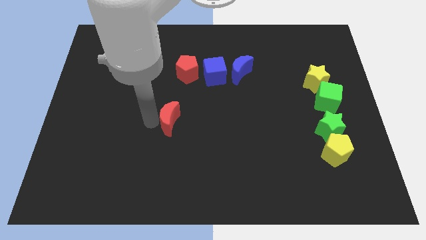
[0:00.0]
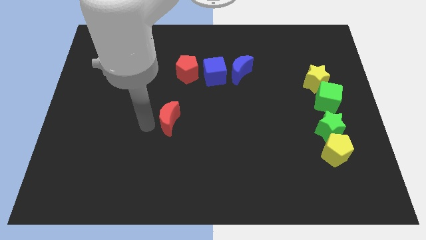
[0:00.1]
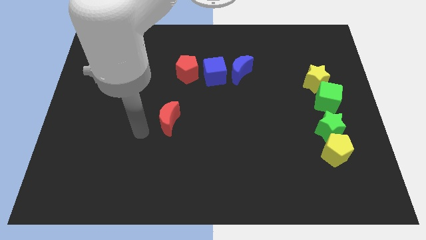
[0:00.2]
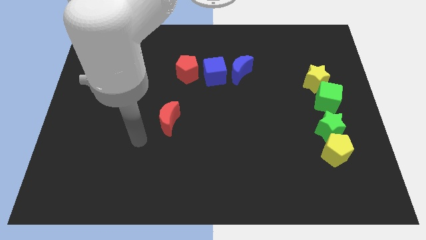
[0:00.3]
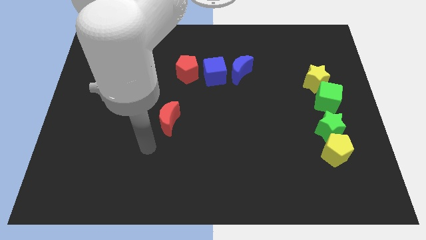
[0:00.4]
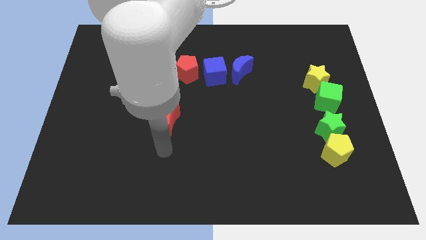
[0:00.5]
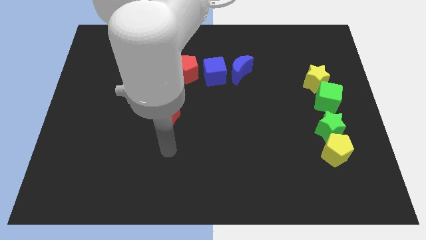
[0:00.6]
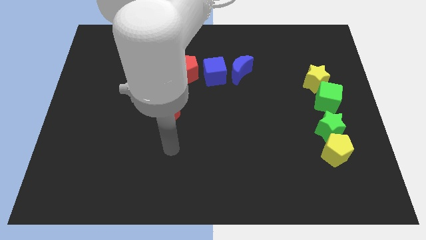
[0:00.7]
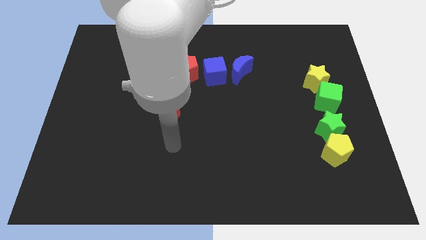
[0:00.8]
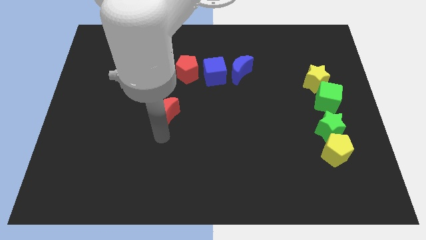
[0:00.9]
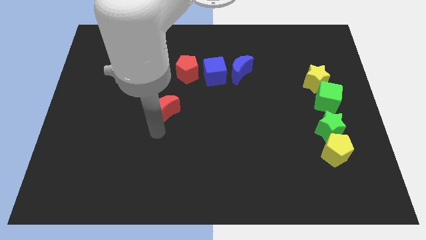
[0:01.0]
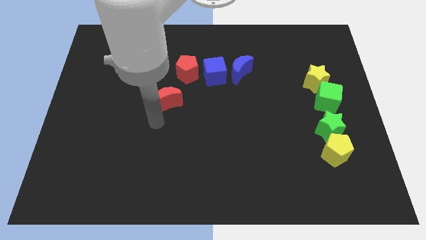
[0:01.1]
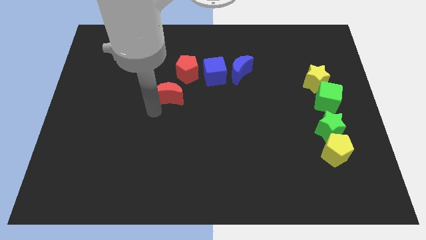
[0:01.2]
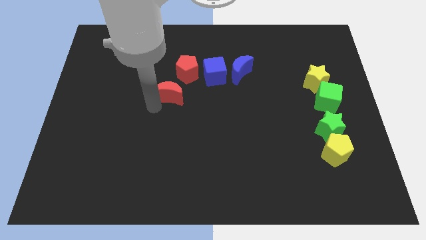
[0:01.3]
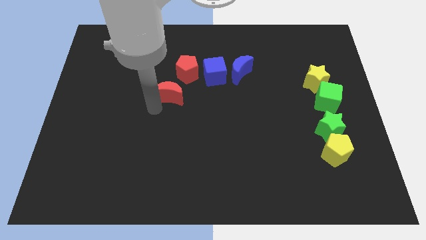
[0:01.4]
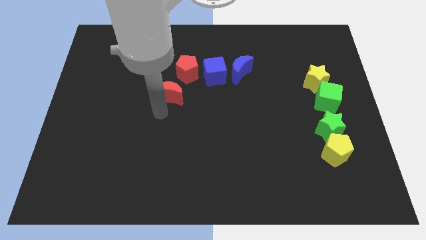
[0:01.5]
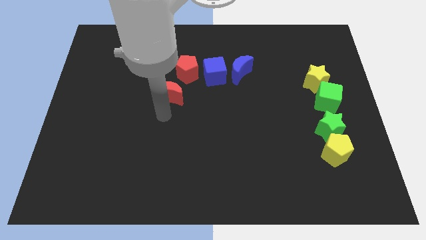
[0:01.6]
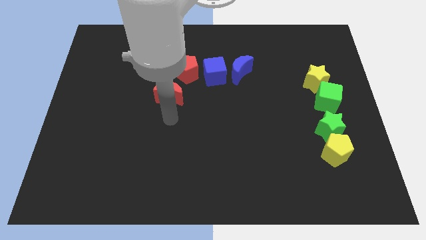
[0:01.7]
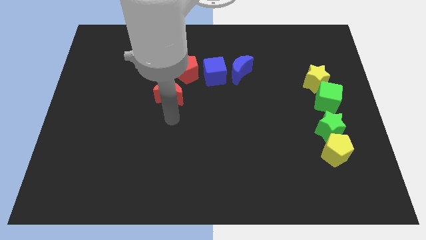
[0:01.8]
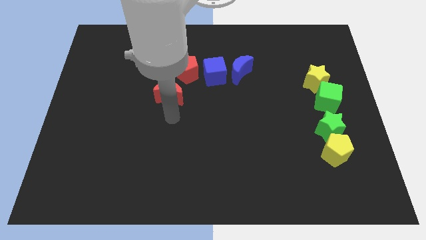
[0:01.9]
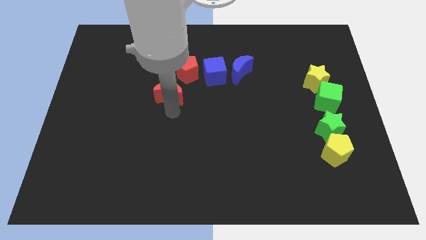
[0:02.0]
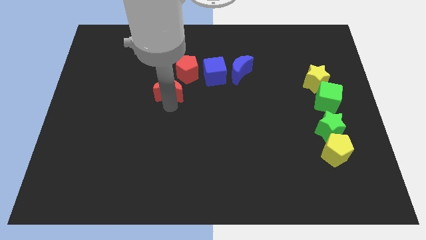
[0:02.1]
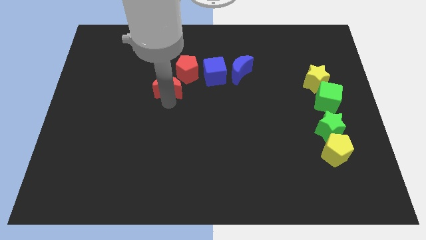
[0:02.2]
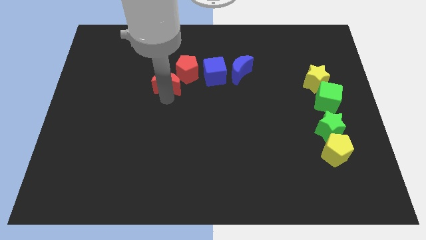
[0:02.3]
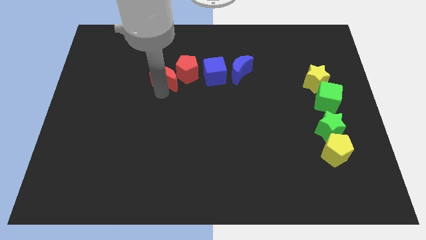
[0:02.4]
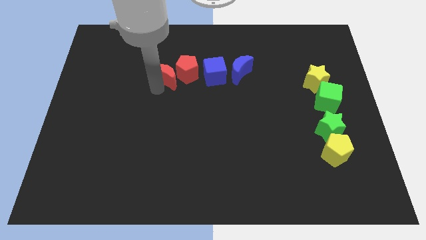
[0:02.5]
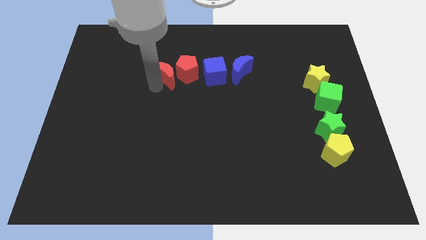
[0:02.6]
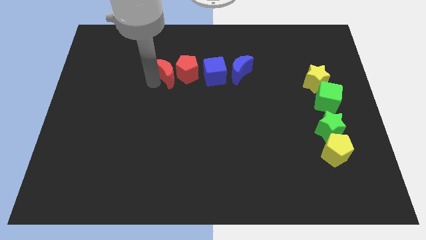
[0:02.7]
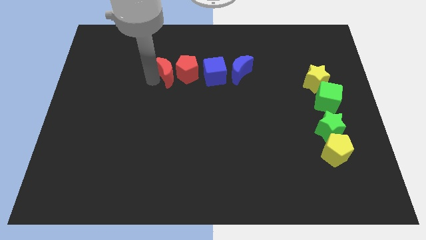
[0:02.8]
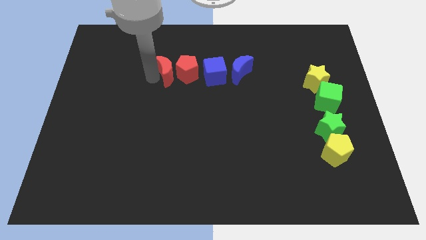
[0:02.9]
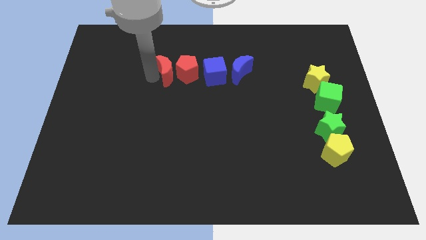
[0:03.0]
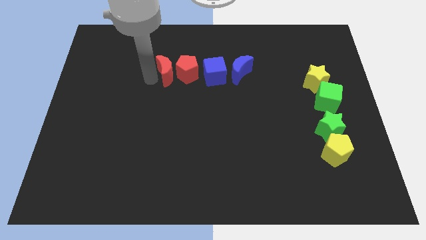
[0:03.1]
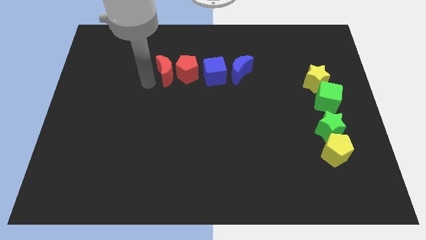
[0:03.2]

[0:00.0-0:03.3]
place the red moon to the left of the red pentagon

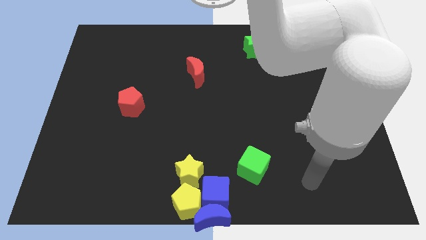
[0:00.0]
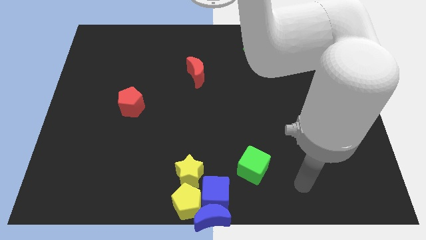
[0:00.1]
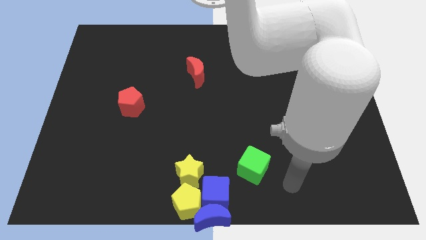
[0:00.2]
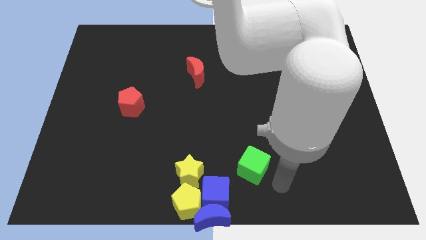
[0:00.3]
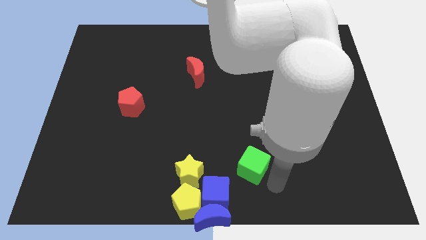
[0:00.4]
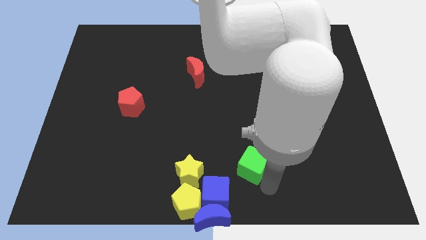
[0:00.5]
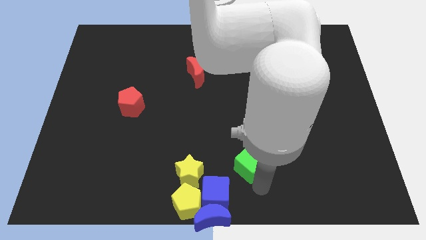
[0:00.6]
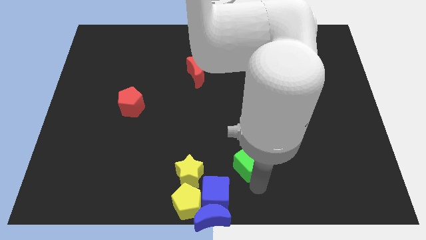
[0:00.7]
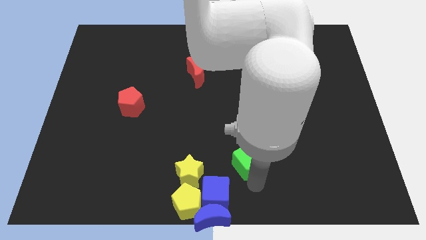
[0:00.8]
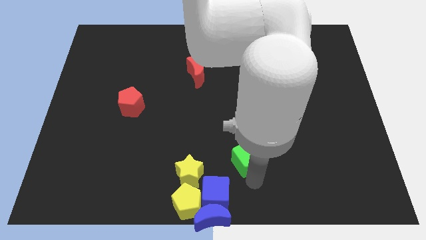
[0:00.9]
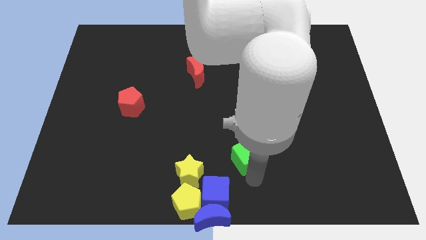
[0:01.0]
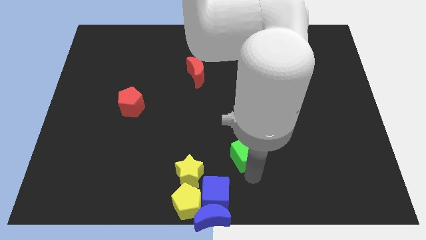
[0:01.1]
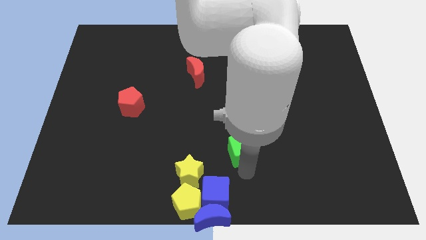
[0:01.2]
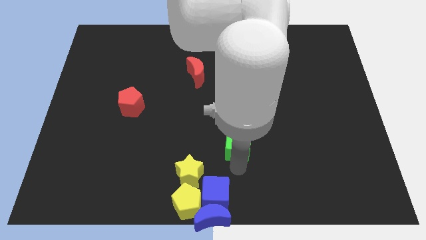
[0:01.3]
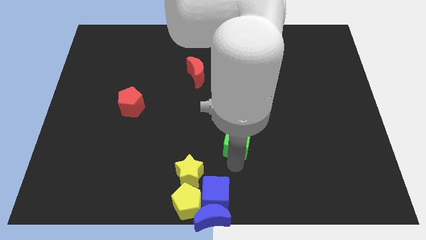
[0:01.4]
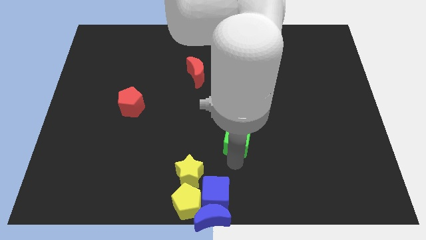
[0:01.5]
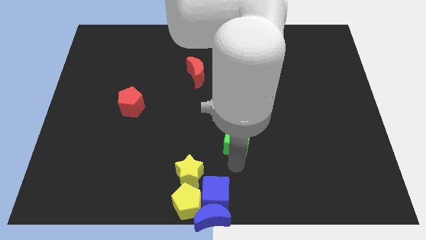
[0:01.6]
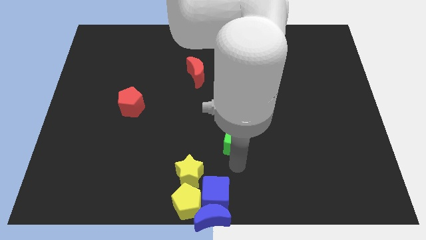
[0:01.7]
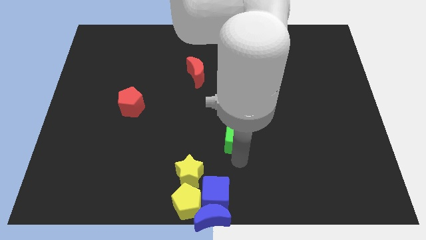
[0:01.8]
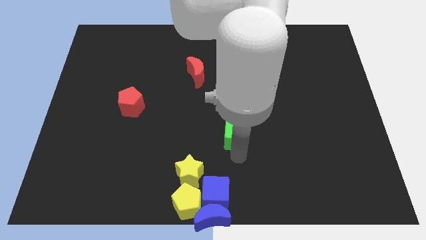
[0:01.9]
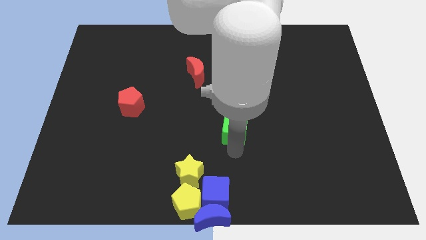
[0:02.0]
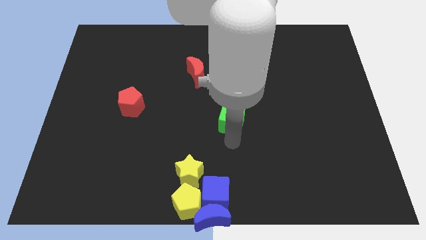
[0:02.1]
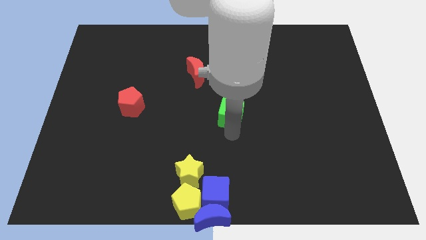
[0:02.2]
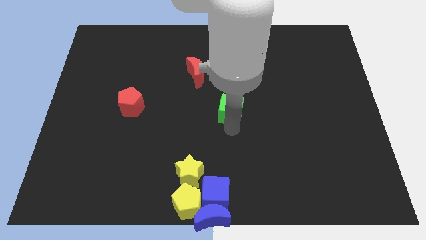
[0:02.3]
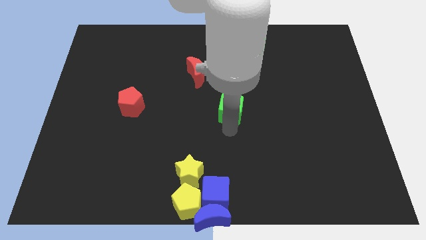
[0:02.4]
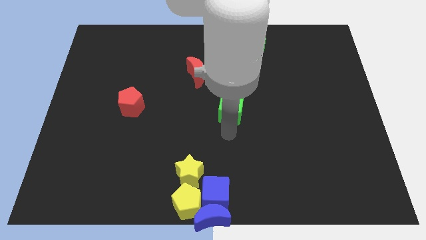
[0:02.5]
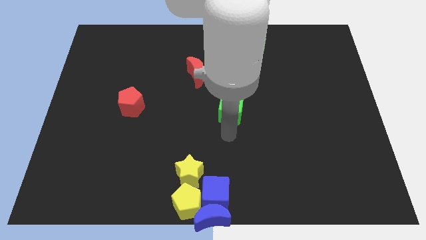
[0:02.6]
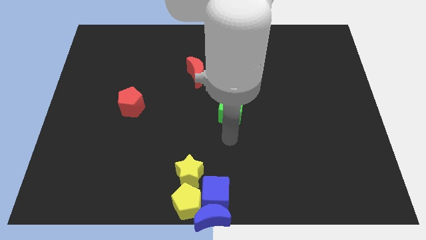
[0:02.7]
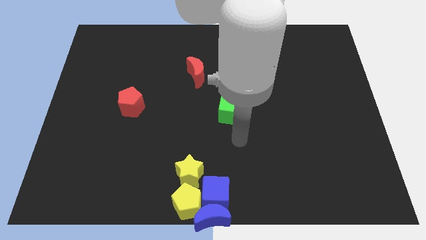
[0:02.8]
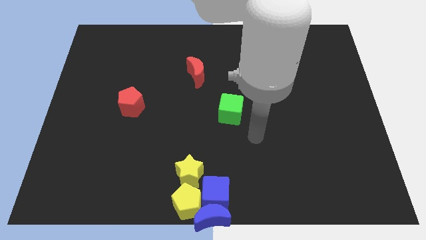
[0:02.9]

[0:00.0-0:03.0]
place the green cube diagonally bottom right to the red moon

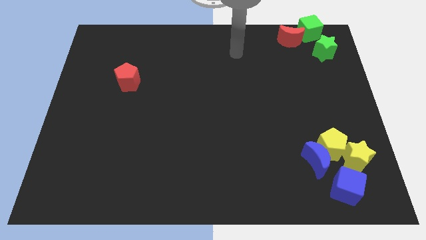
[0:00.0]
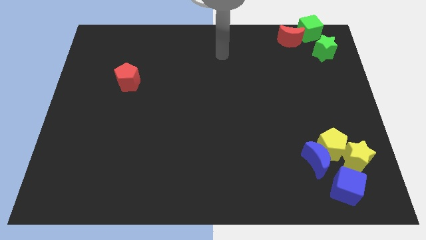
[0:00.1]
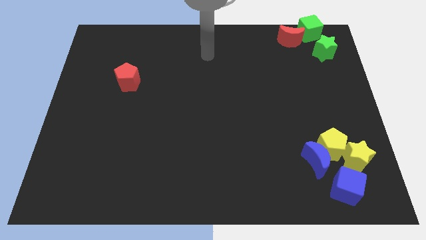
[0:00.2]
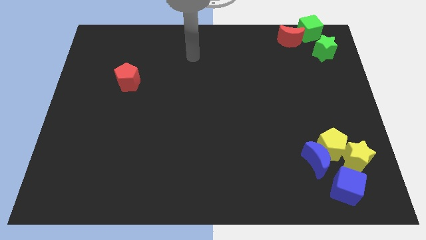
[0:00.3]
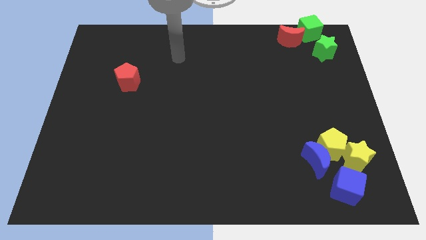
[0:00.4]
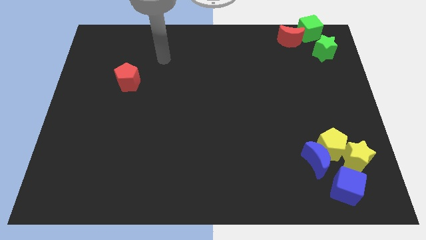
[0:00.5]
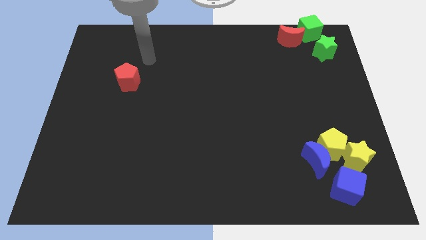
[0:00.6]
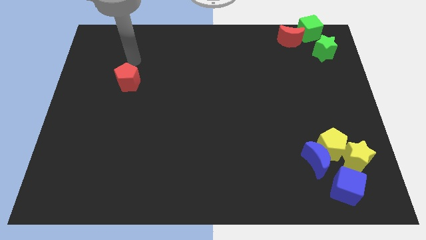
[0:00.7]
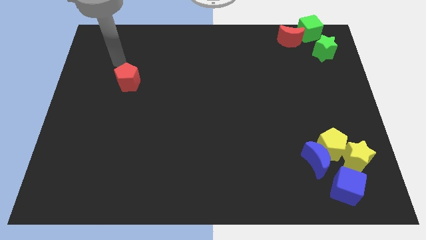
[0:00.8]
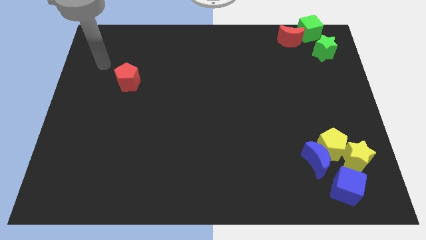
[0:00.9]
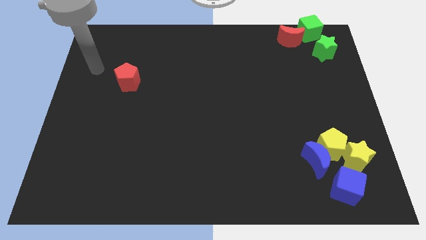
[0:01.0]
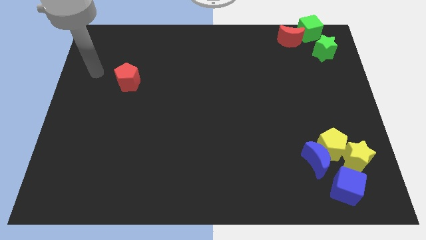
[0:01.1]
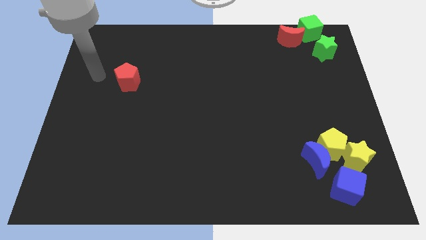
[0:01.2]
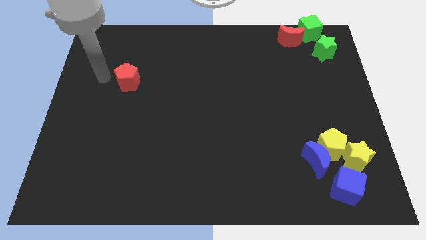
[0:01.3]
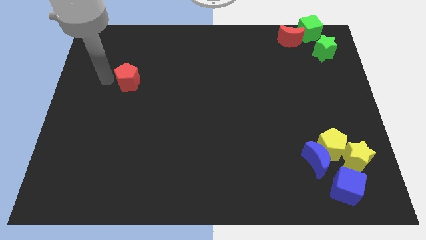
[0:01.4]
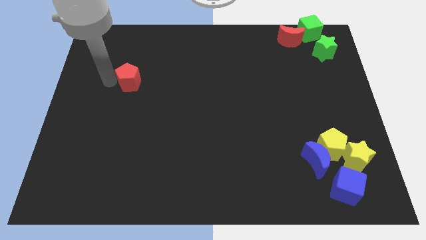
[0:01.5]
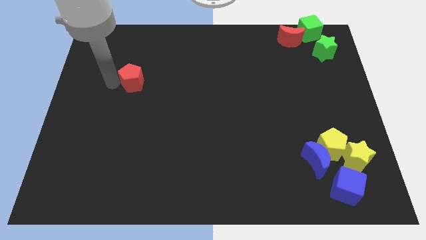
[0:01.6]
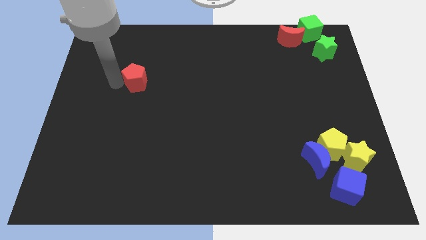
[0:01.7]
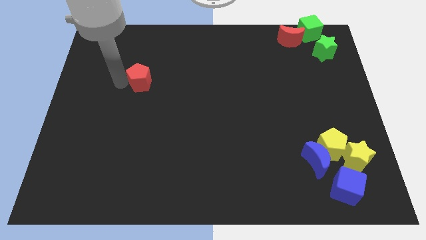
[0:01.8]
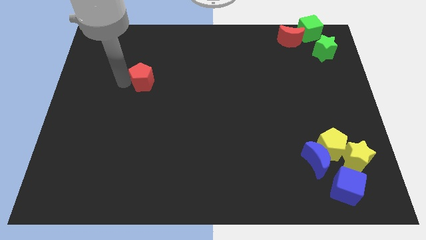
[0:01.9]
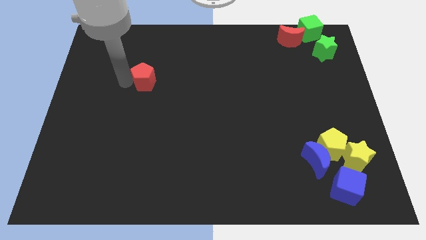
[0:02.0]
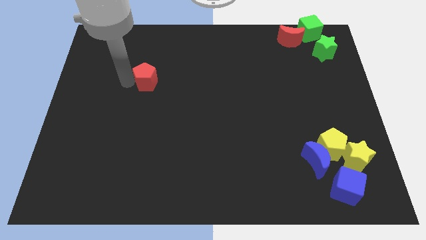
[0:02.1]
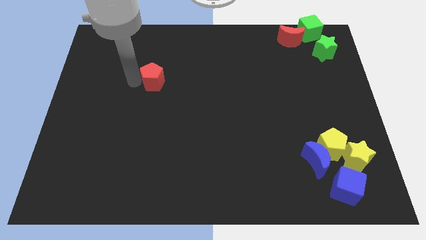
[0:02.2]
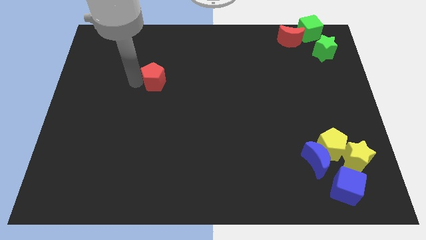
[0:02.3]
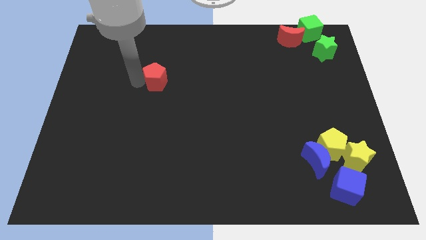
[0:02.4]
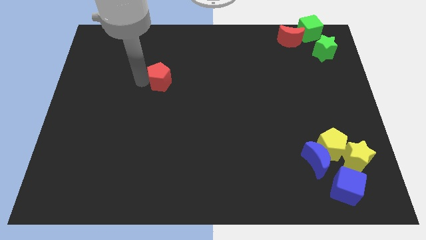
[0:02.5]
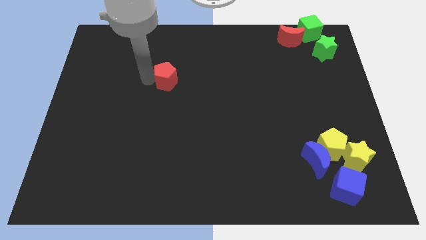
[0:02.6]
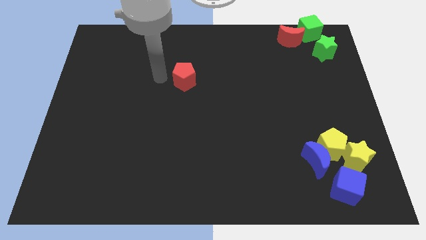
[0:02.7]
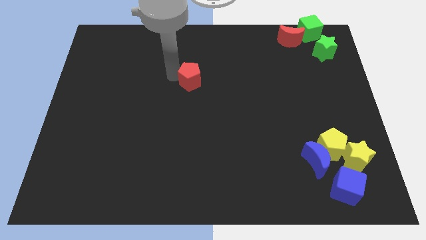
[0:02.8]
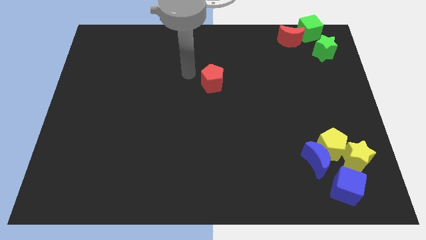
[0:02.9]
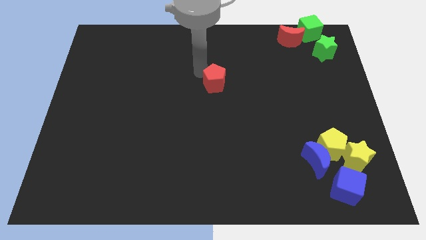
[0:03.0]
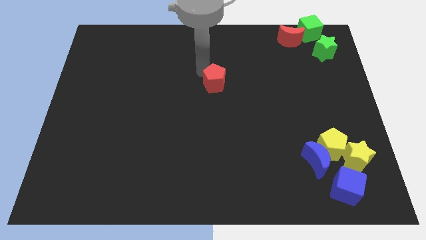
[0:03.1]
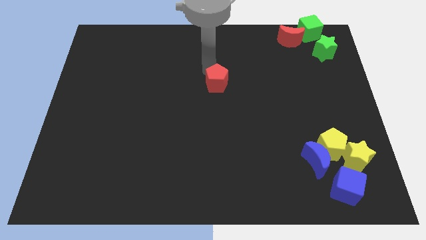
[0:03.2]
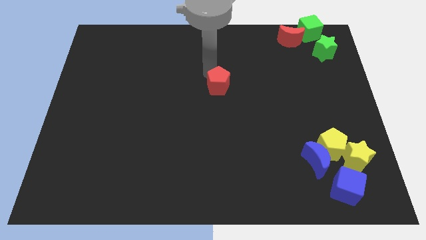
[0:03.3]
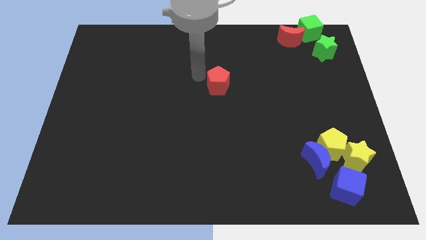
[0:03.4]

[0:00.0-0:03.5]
place the red pentagon at the center of the board
